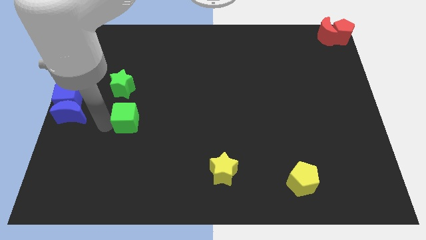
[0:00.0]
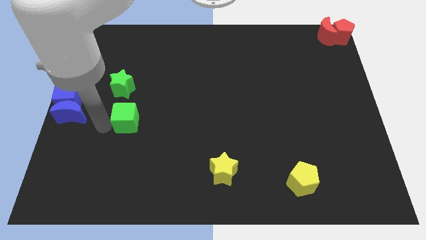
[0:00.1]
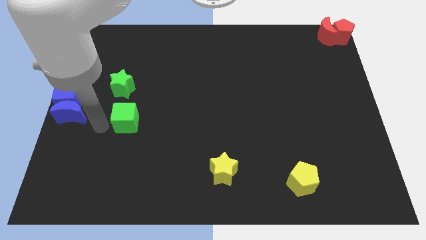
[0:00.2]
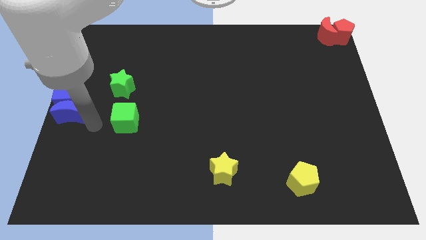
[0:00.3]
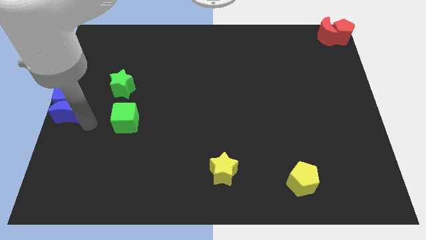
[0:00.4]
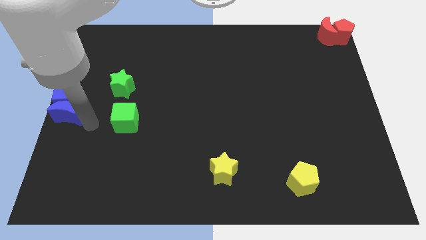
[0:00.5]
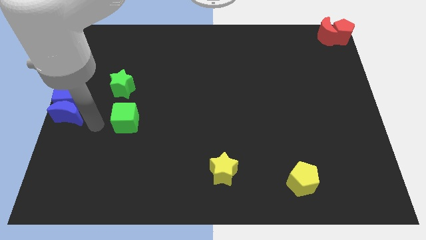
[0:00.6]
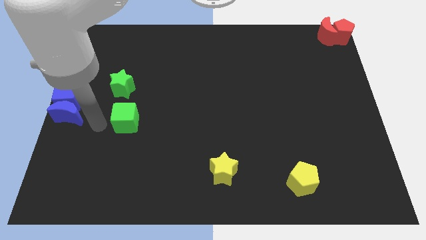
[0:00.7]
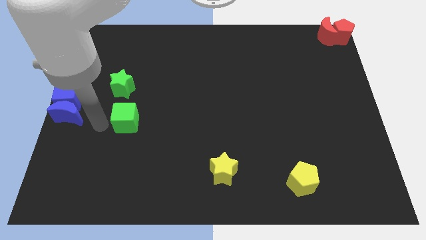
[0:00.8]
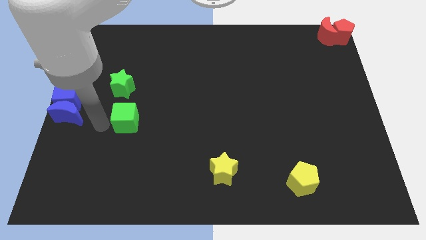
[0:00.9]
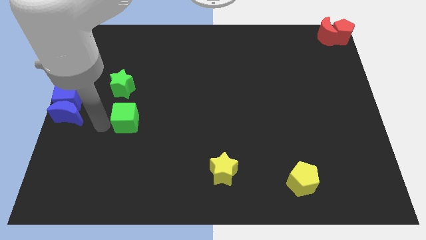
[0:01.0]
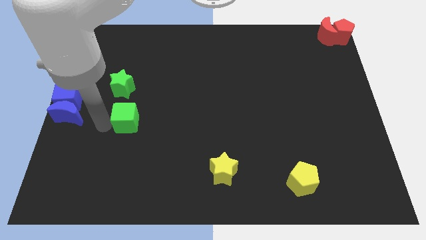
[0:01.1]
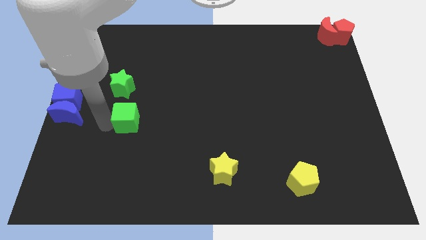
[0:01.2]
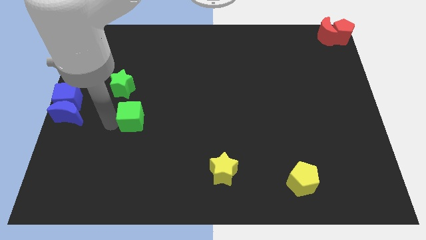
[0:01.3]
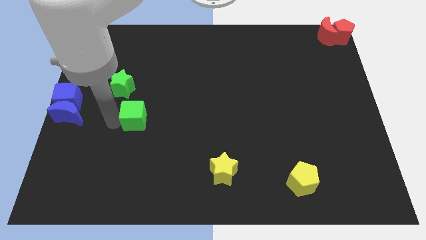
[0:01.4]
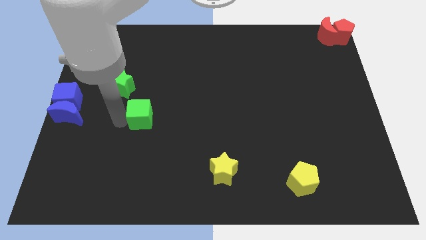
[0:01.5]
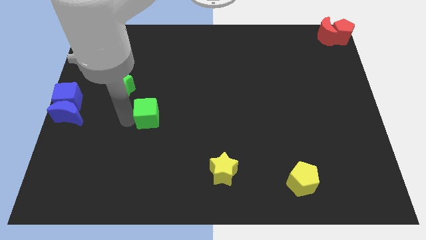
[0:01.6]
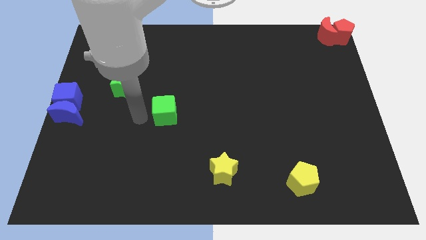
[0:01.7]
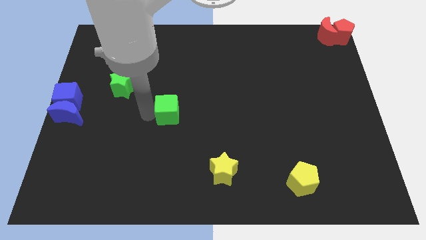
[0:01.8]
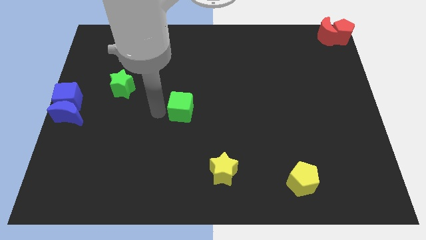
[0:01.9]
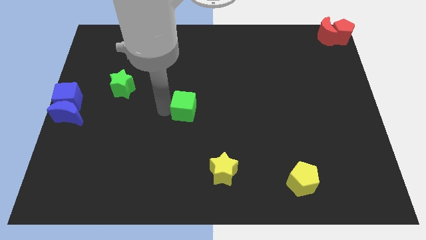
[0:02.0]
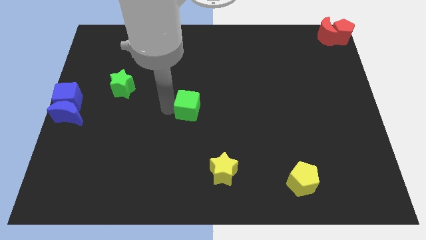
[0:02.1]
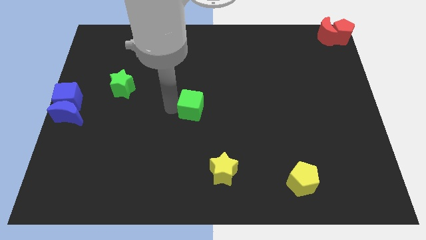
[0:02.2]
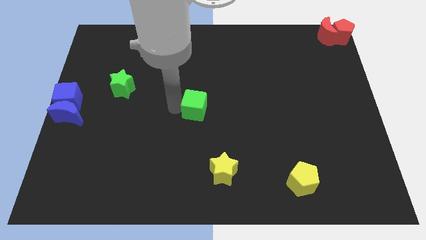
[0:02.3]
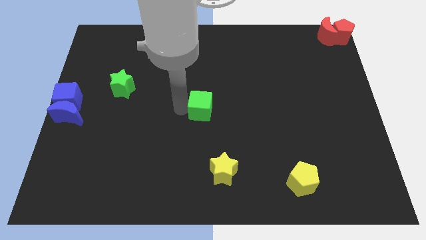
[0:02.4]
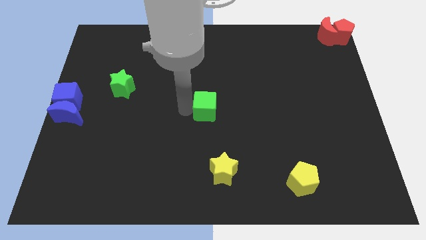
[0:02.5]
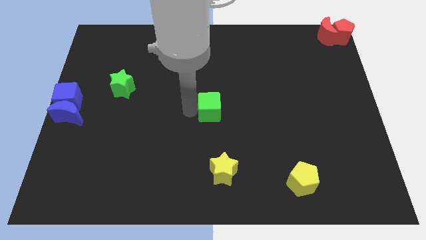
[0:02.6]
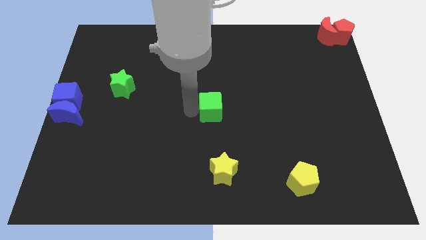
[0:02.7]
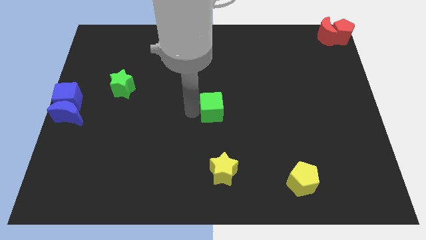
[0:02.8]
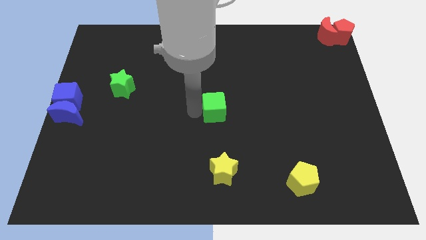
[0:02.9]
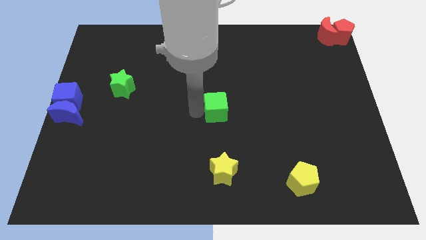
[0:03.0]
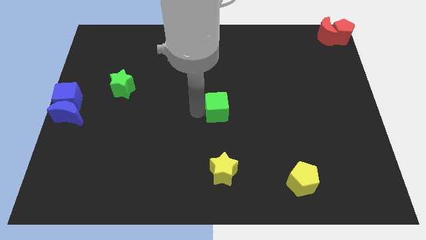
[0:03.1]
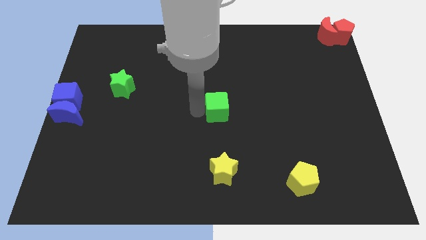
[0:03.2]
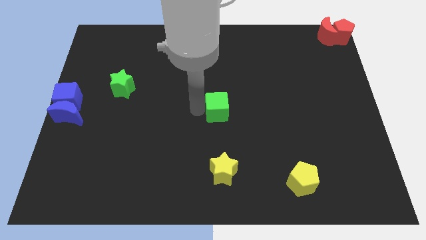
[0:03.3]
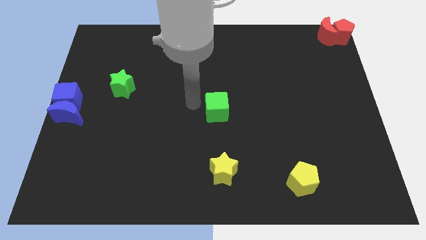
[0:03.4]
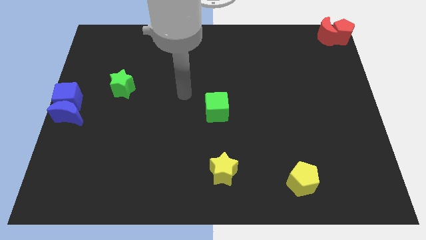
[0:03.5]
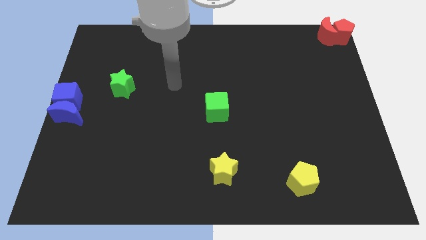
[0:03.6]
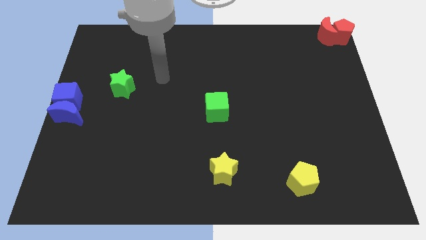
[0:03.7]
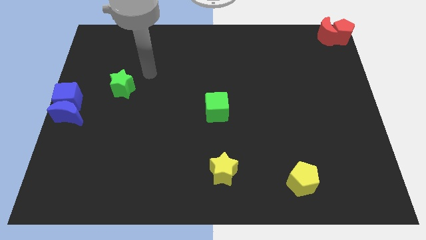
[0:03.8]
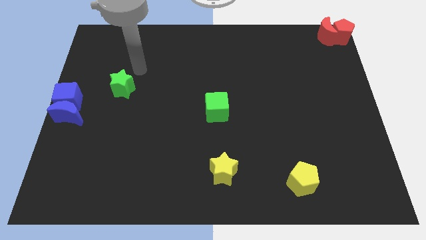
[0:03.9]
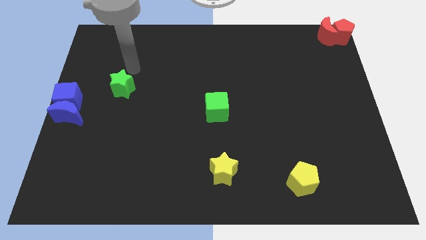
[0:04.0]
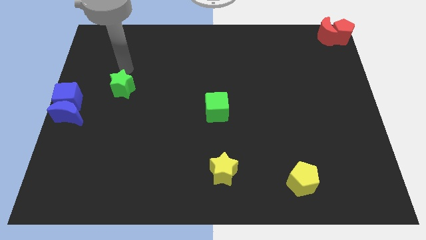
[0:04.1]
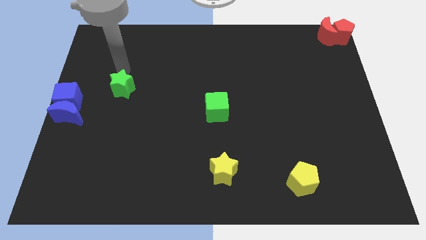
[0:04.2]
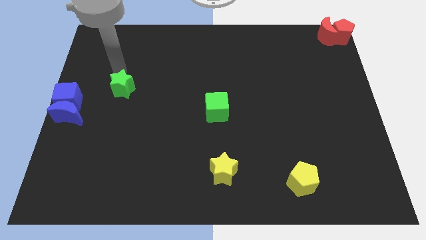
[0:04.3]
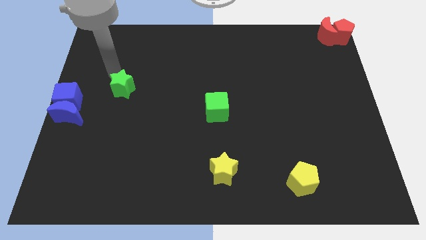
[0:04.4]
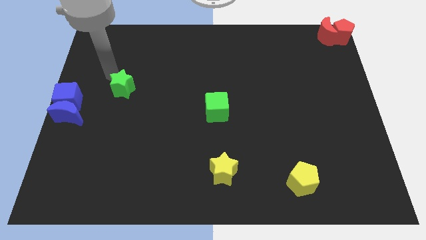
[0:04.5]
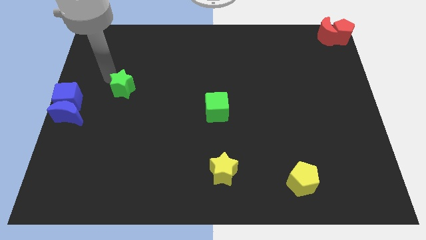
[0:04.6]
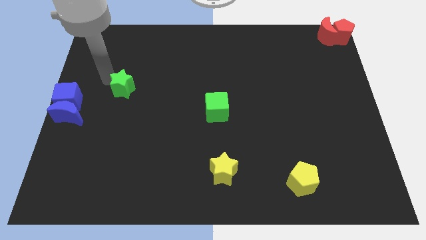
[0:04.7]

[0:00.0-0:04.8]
move the green cube at the center of the board

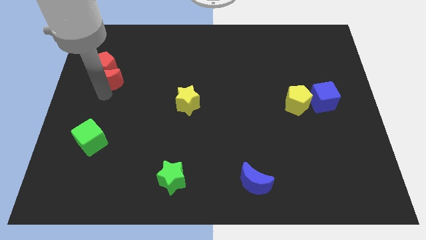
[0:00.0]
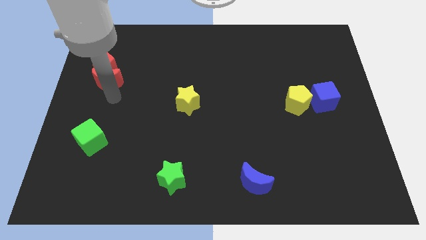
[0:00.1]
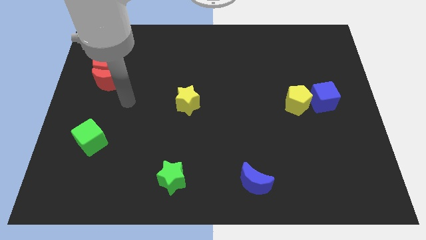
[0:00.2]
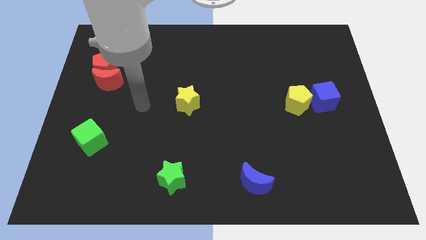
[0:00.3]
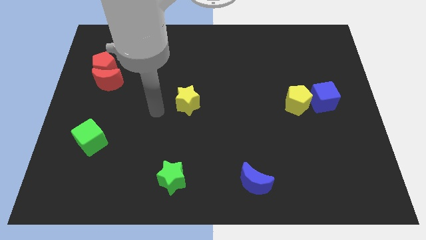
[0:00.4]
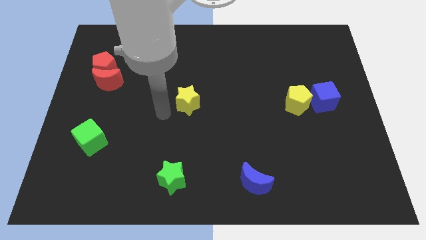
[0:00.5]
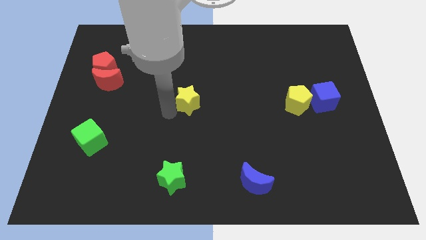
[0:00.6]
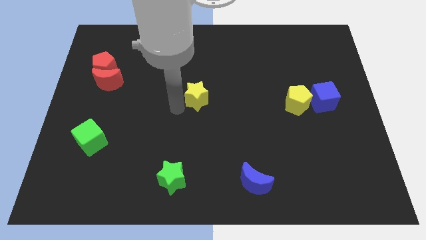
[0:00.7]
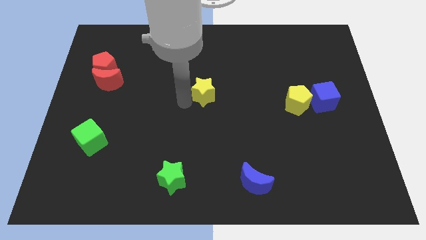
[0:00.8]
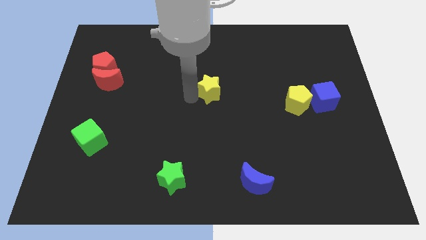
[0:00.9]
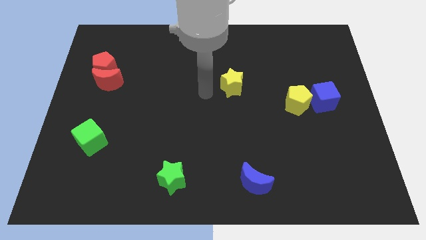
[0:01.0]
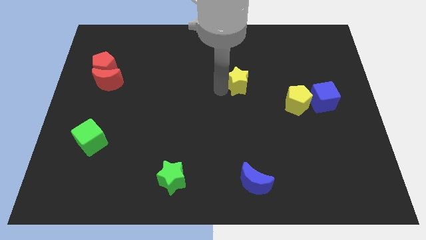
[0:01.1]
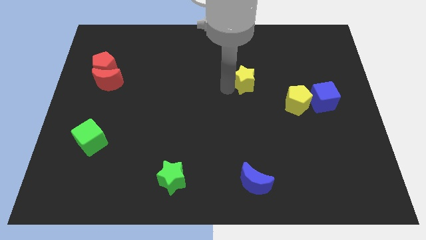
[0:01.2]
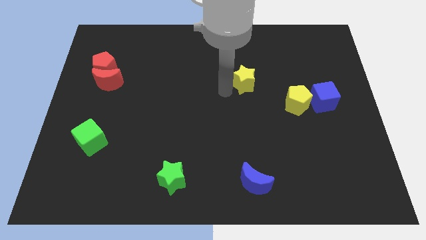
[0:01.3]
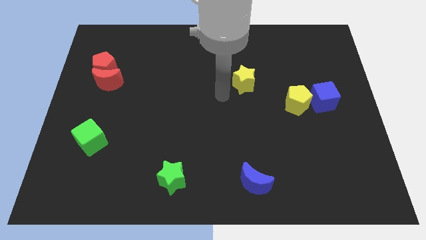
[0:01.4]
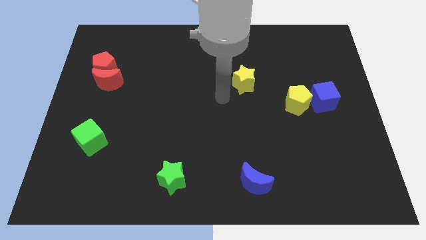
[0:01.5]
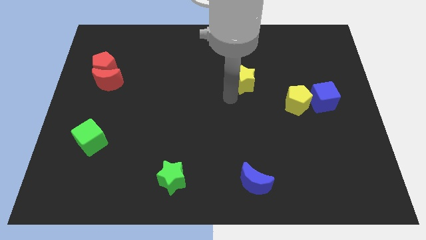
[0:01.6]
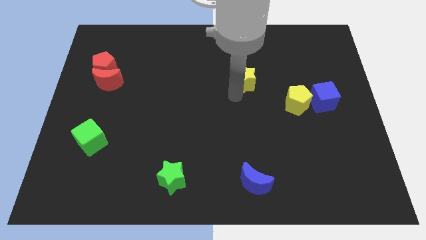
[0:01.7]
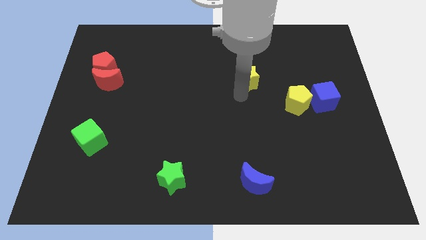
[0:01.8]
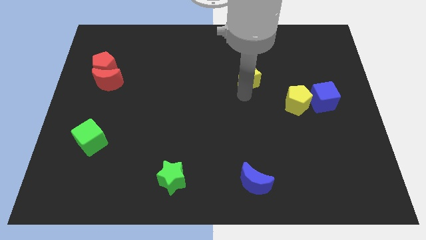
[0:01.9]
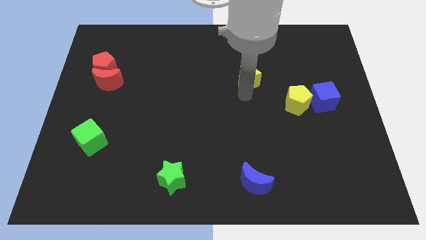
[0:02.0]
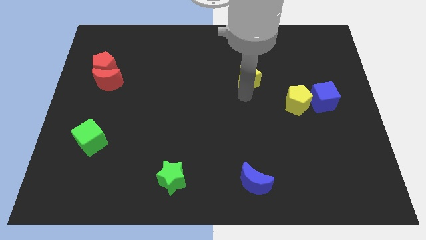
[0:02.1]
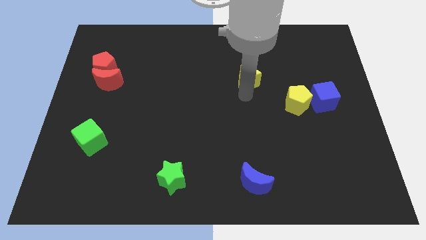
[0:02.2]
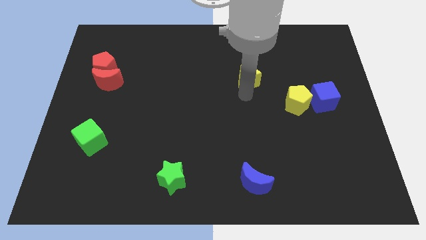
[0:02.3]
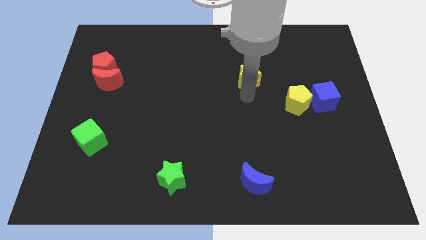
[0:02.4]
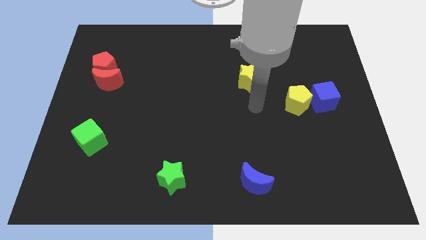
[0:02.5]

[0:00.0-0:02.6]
place the yellow star diagonally above the top left side of the yellow pentagon

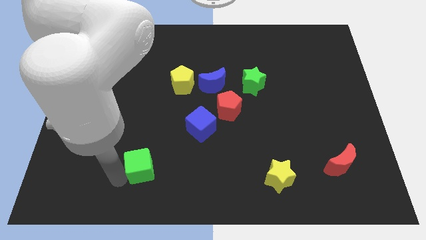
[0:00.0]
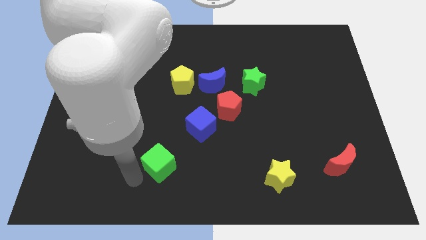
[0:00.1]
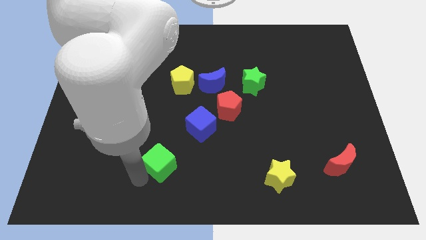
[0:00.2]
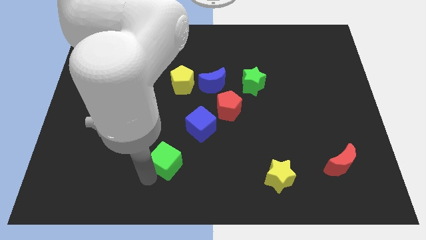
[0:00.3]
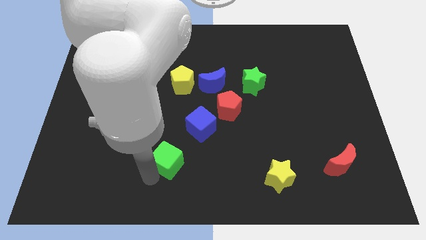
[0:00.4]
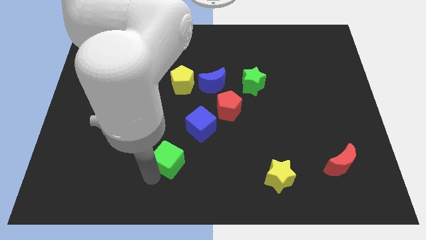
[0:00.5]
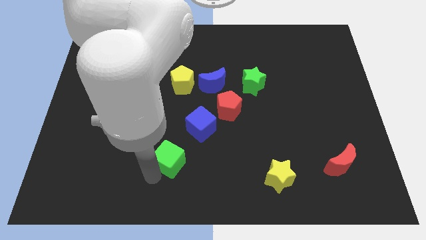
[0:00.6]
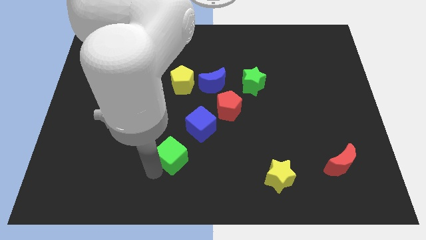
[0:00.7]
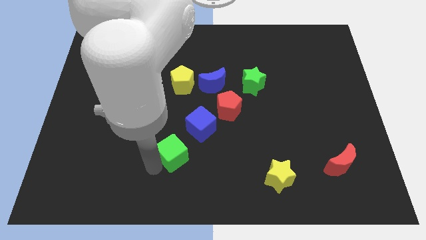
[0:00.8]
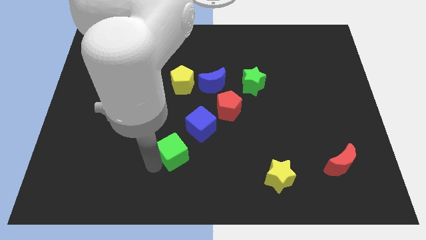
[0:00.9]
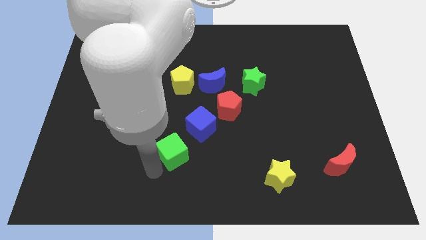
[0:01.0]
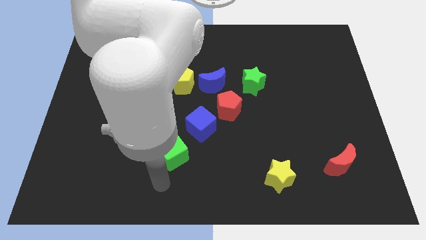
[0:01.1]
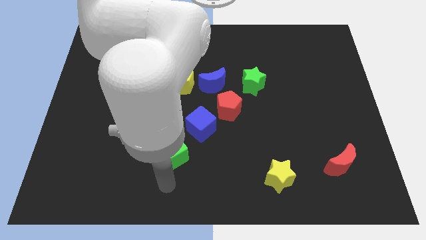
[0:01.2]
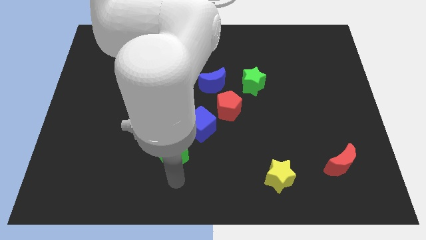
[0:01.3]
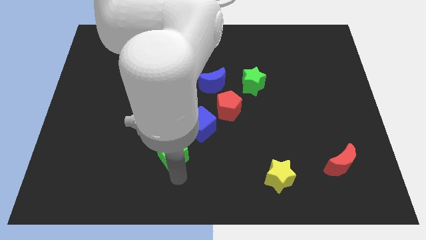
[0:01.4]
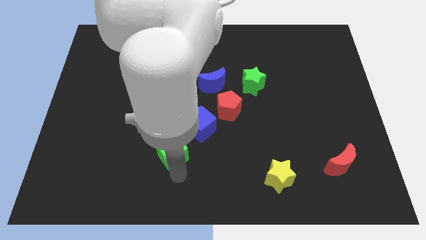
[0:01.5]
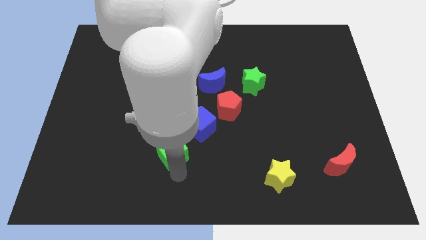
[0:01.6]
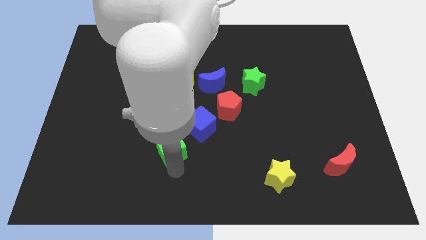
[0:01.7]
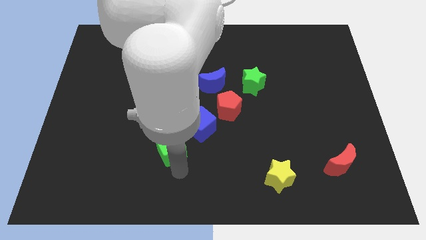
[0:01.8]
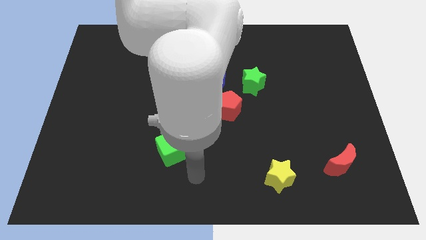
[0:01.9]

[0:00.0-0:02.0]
place the green cube to the bottom left of the blue cube
